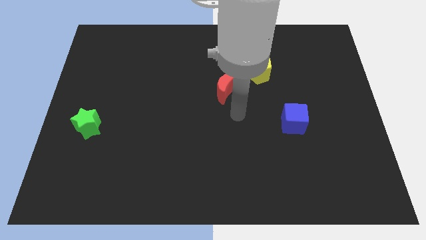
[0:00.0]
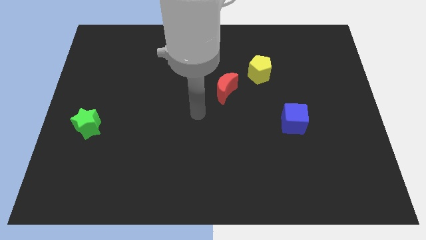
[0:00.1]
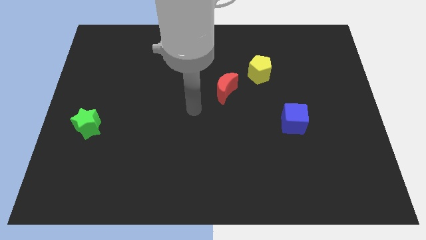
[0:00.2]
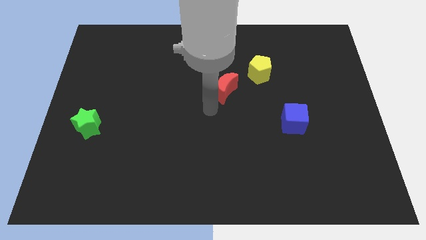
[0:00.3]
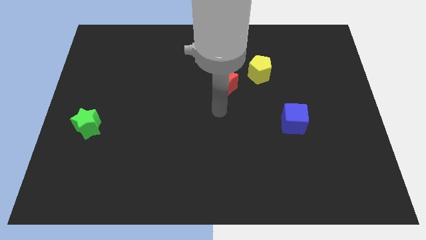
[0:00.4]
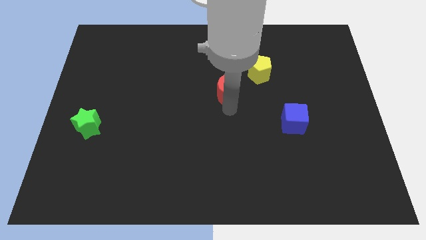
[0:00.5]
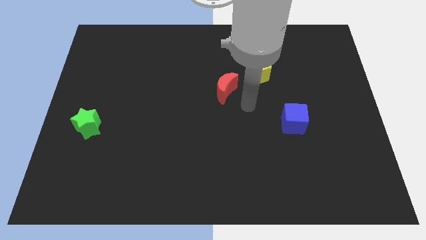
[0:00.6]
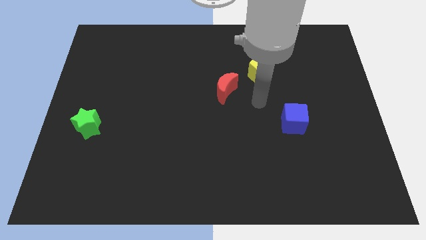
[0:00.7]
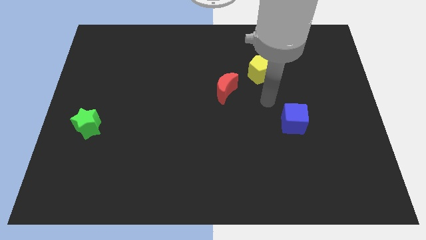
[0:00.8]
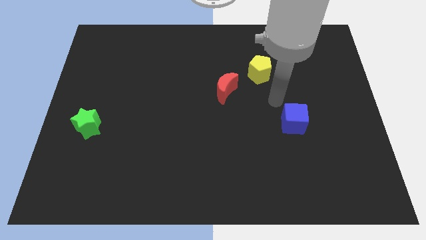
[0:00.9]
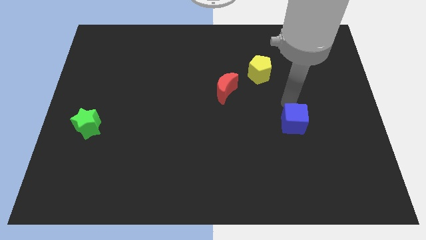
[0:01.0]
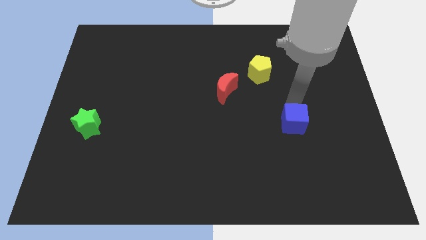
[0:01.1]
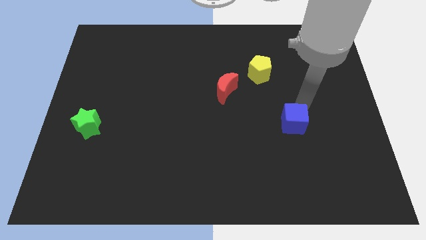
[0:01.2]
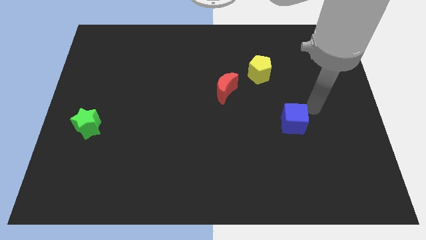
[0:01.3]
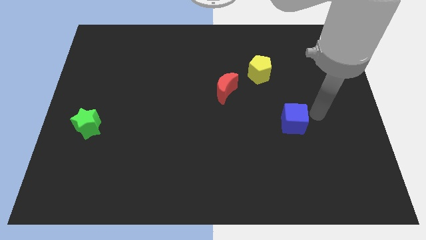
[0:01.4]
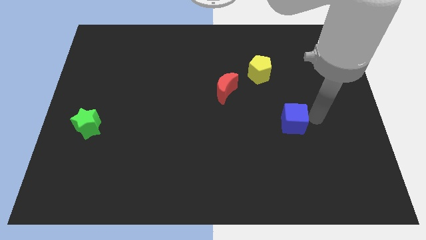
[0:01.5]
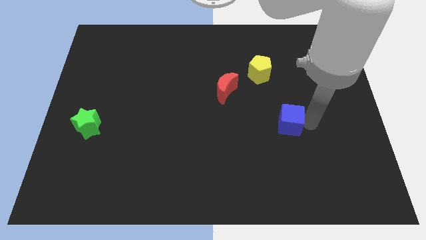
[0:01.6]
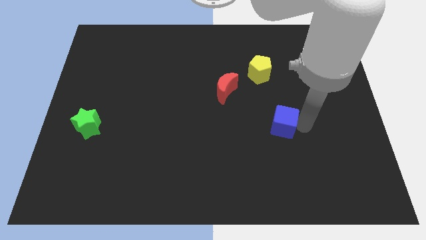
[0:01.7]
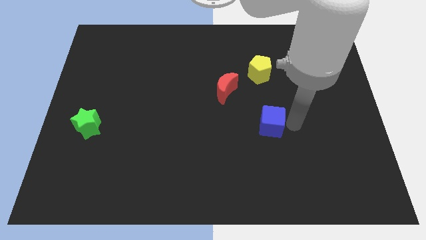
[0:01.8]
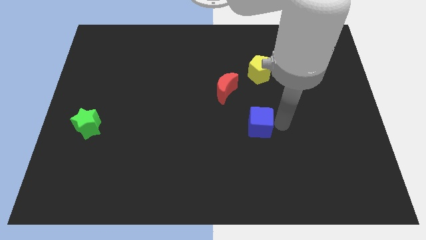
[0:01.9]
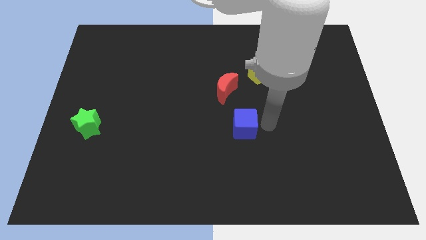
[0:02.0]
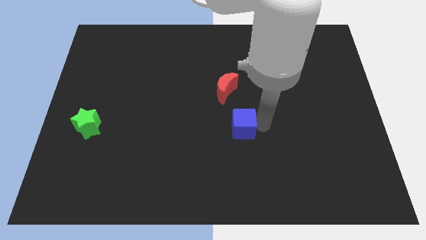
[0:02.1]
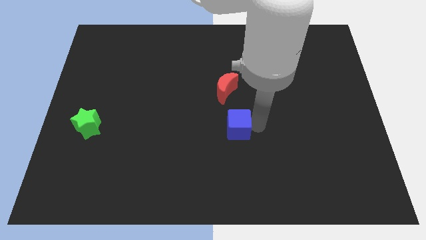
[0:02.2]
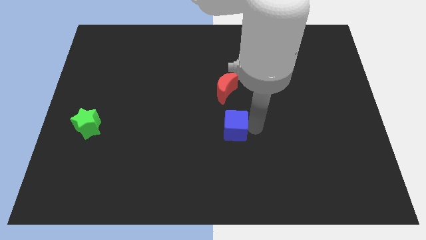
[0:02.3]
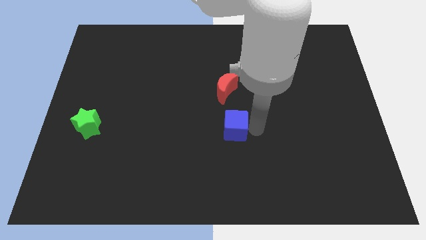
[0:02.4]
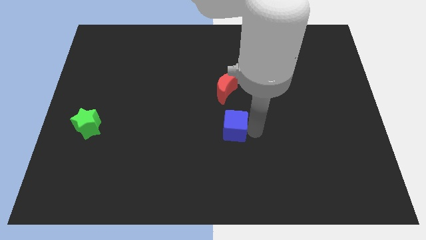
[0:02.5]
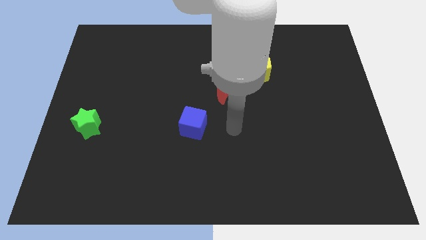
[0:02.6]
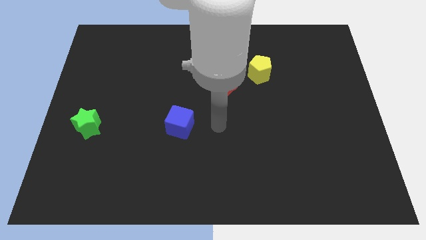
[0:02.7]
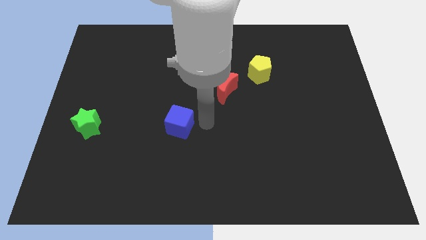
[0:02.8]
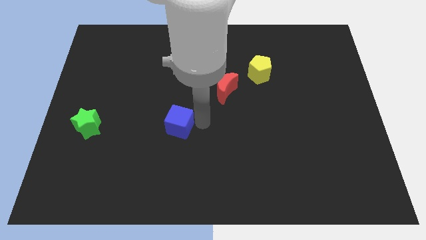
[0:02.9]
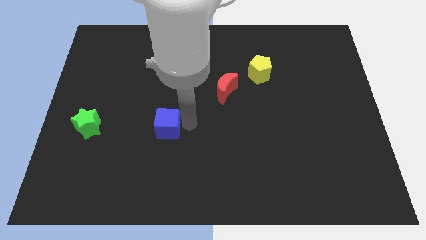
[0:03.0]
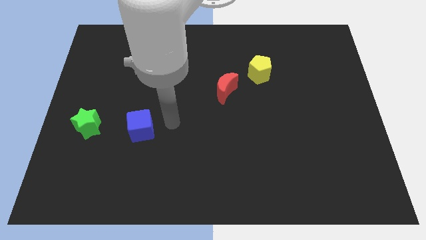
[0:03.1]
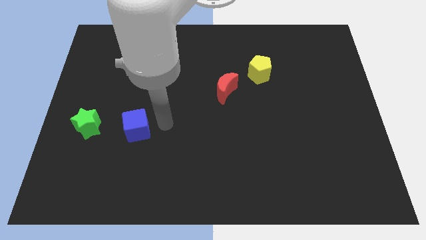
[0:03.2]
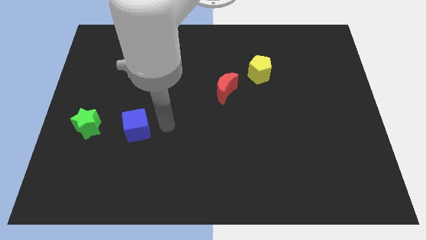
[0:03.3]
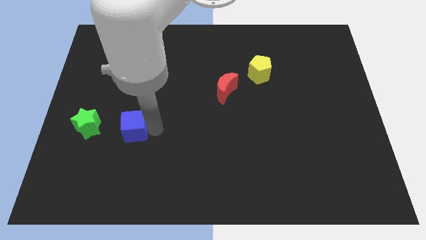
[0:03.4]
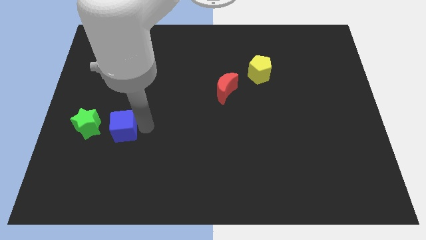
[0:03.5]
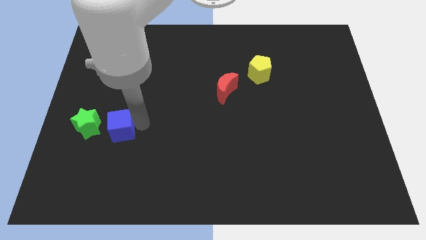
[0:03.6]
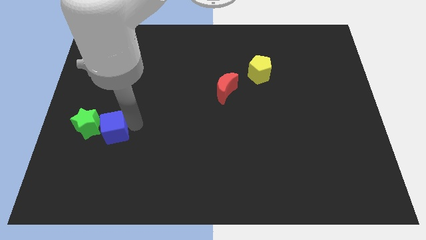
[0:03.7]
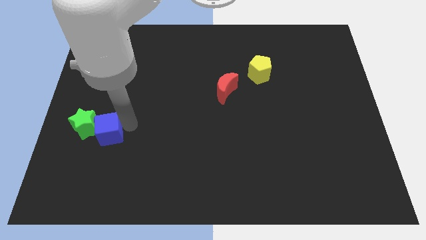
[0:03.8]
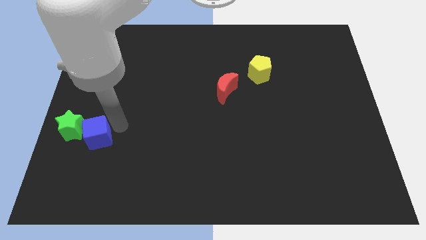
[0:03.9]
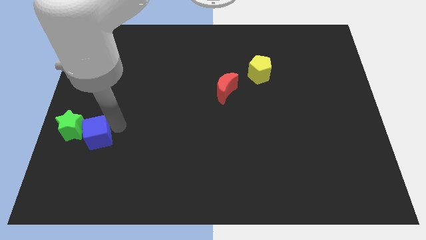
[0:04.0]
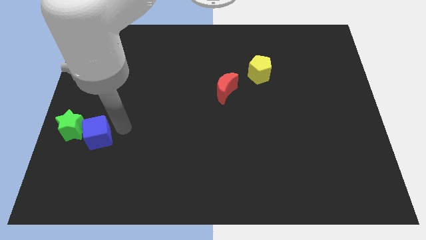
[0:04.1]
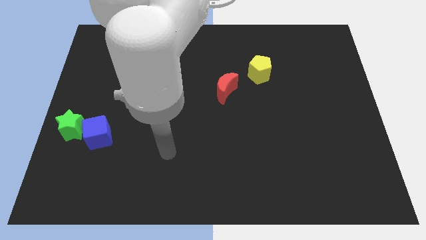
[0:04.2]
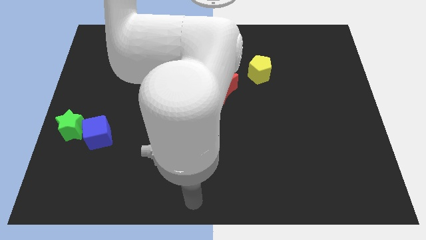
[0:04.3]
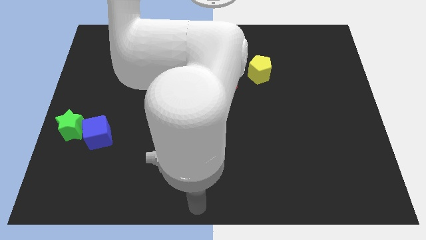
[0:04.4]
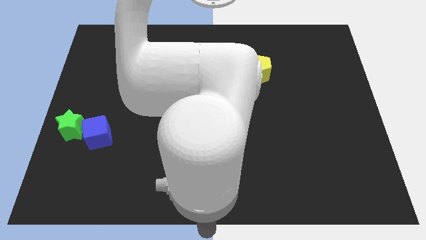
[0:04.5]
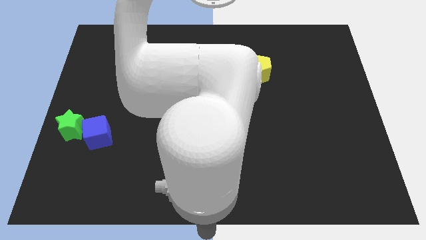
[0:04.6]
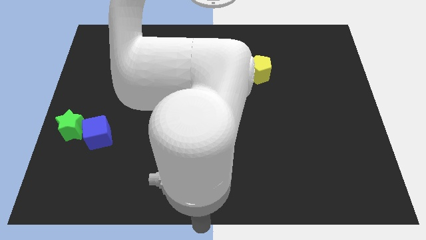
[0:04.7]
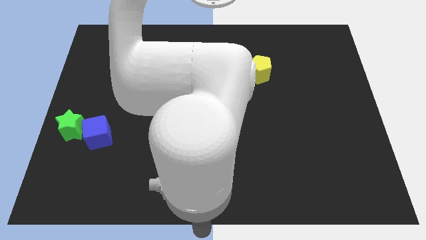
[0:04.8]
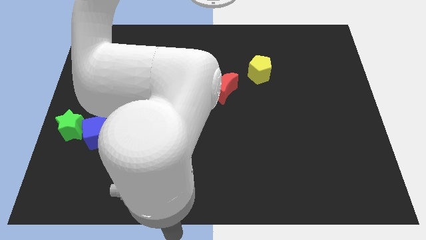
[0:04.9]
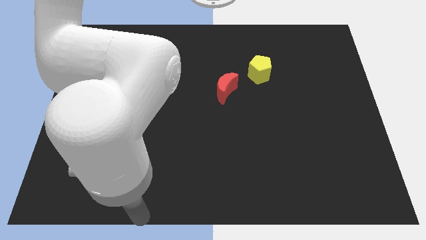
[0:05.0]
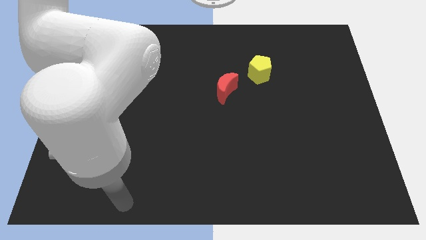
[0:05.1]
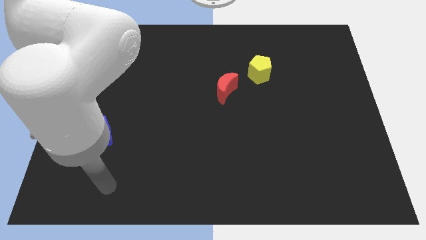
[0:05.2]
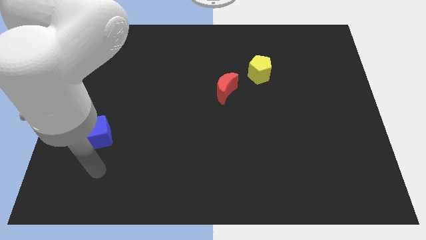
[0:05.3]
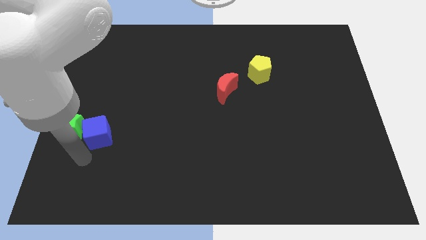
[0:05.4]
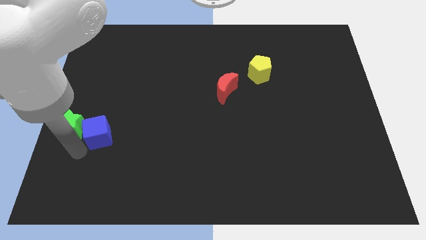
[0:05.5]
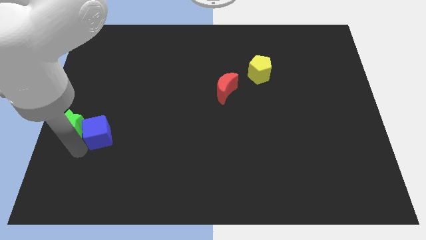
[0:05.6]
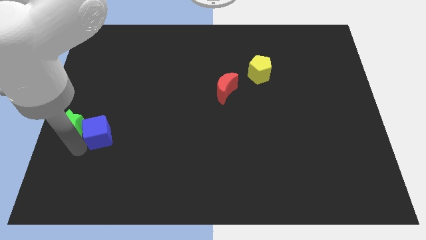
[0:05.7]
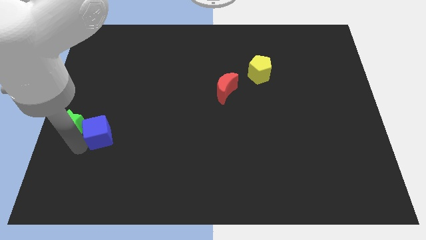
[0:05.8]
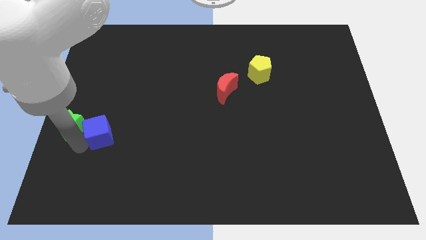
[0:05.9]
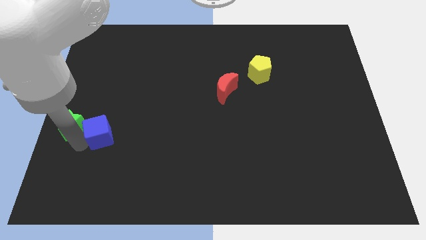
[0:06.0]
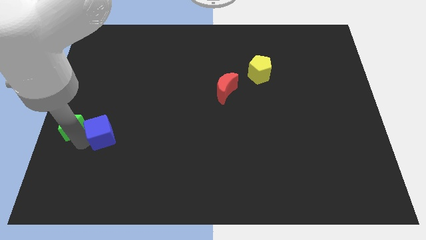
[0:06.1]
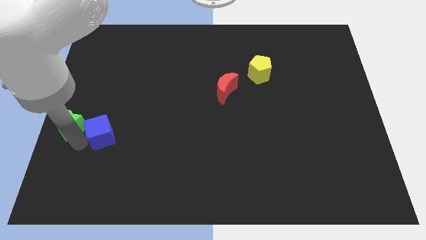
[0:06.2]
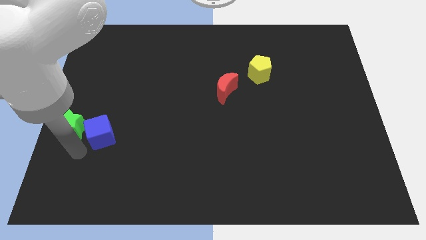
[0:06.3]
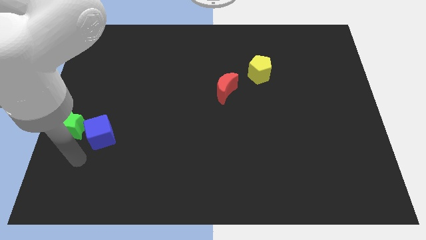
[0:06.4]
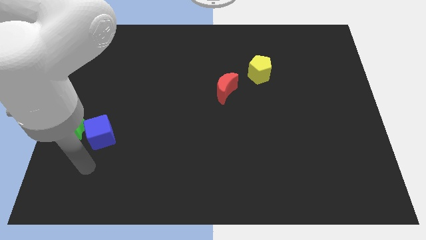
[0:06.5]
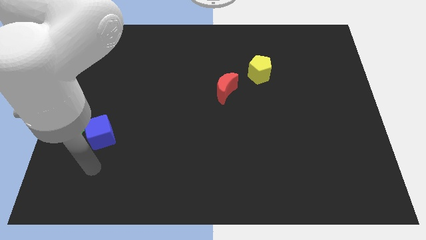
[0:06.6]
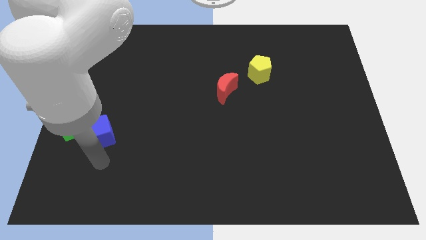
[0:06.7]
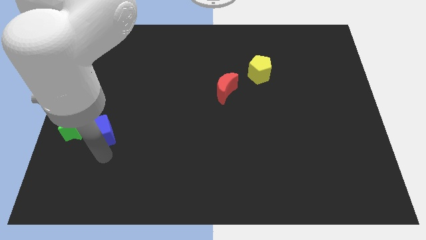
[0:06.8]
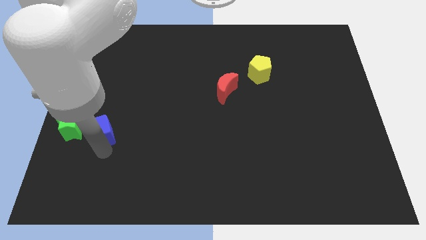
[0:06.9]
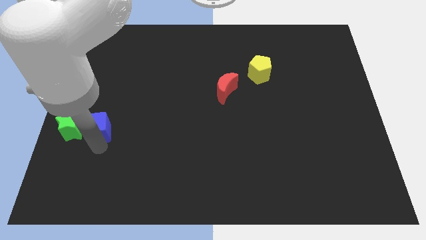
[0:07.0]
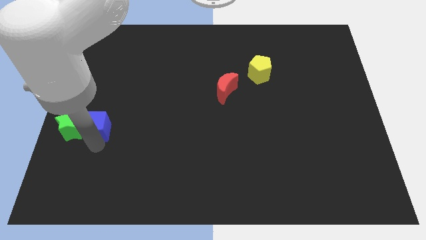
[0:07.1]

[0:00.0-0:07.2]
move the cube next to the green block

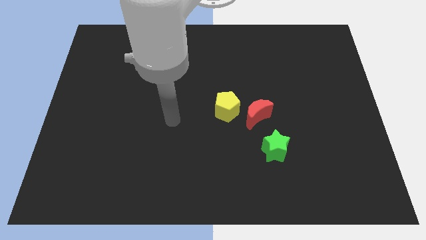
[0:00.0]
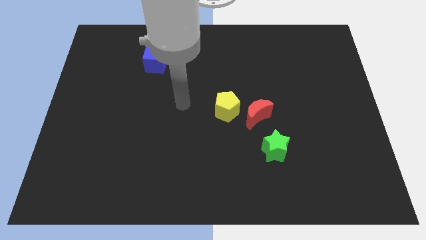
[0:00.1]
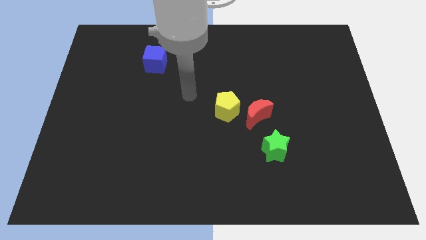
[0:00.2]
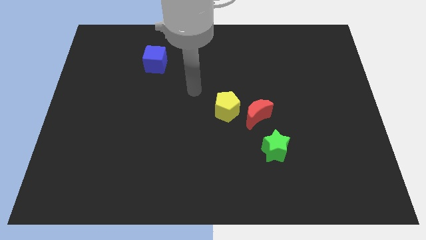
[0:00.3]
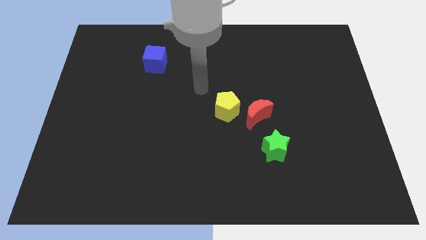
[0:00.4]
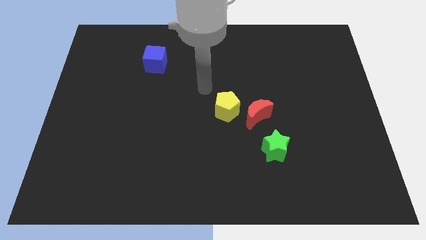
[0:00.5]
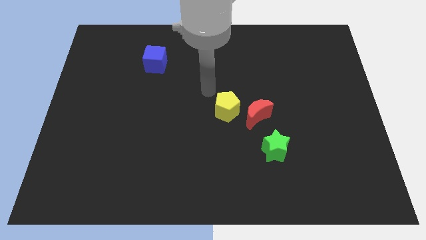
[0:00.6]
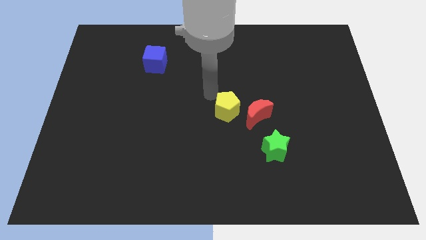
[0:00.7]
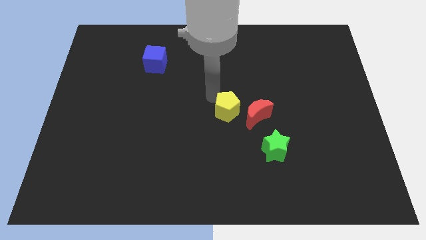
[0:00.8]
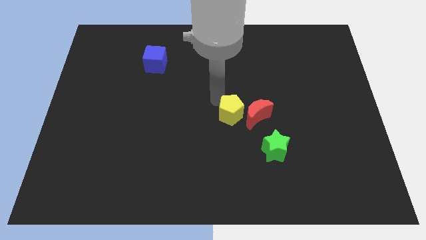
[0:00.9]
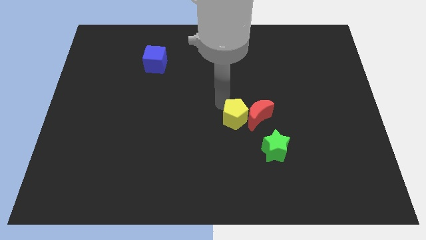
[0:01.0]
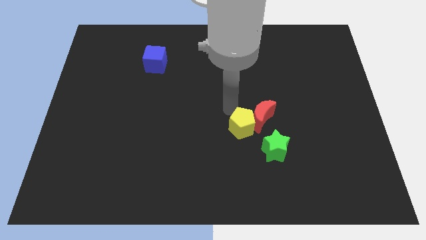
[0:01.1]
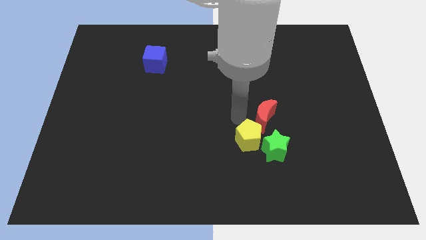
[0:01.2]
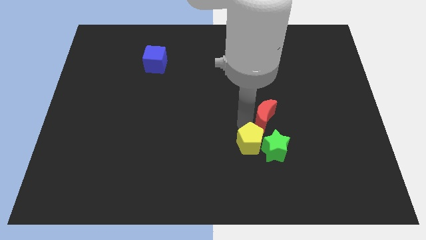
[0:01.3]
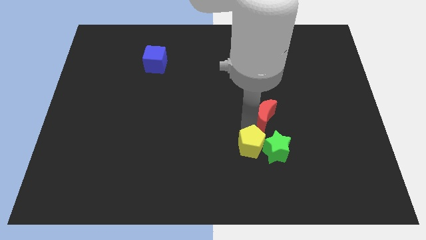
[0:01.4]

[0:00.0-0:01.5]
put the yellow pentagon close to the green block
